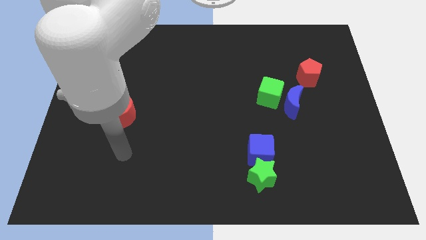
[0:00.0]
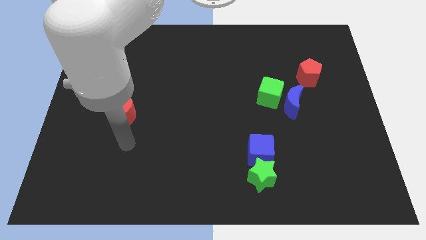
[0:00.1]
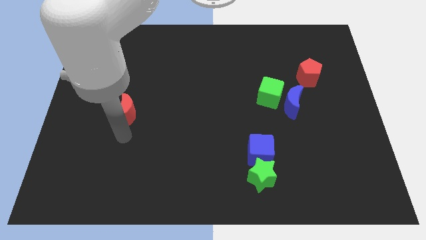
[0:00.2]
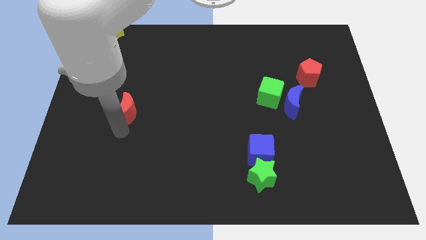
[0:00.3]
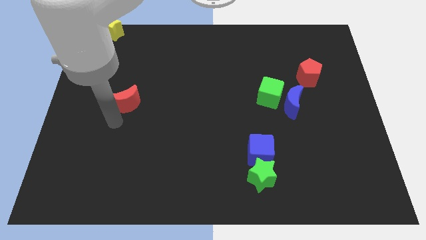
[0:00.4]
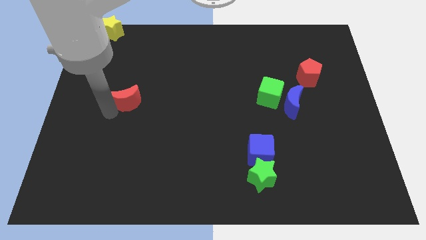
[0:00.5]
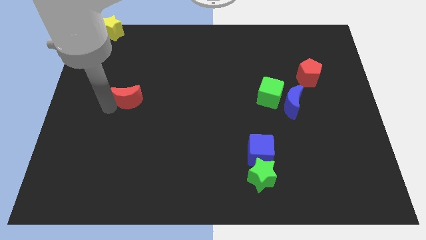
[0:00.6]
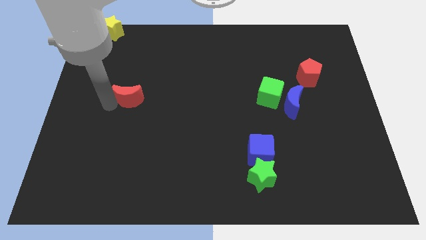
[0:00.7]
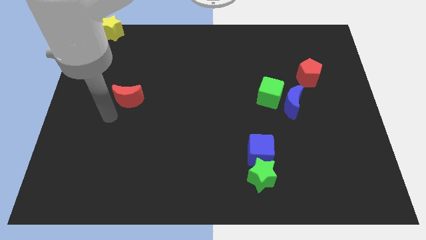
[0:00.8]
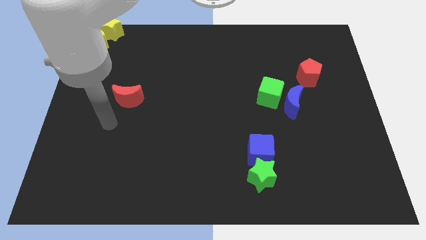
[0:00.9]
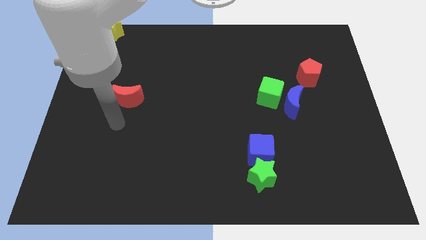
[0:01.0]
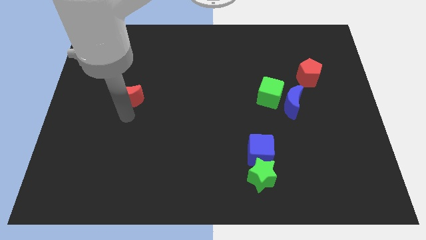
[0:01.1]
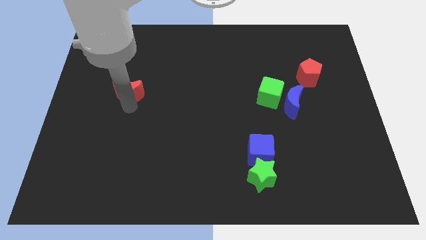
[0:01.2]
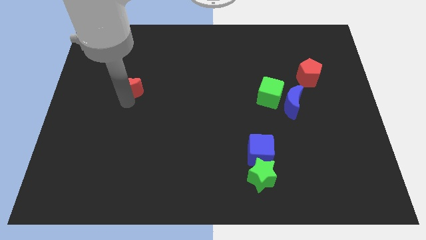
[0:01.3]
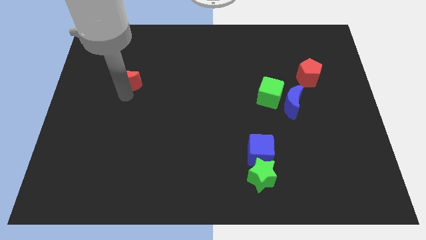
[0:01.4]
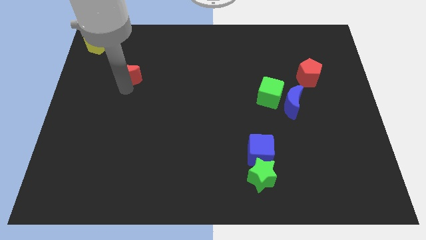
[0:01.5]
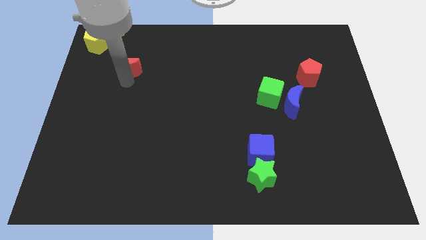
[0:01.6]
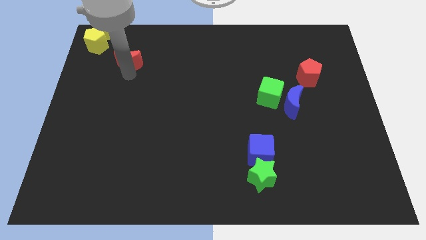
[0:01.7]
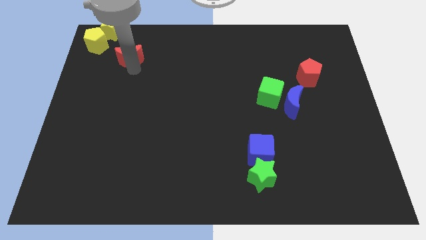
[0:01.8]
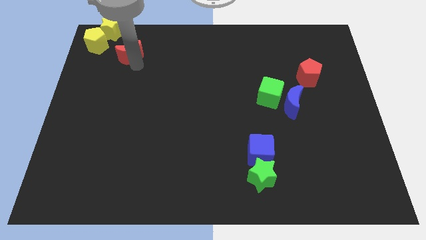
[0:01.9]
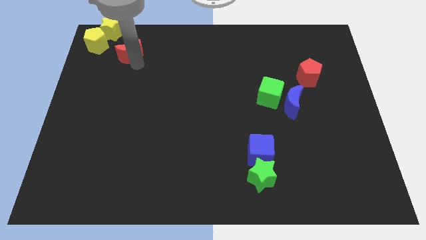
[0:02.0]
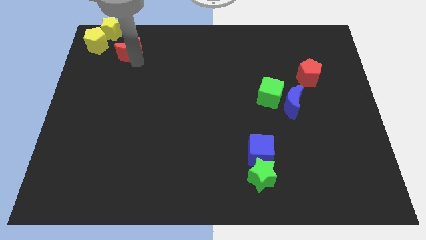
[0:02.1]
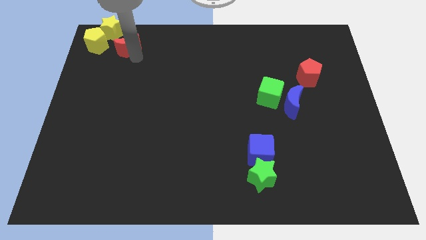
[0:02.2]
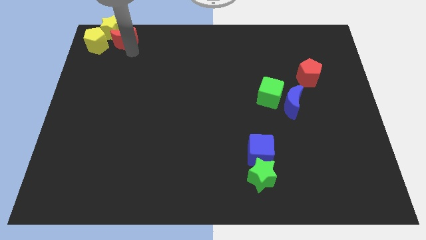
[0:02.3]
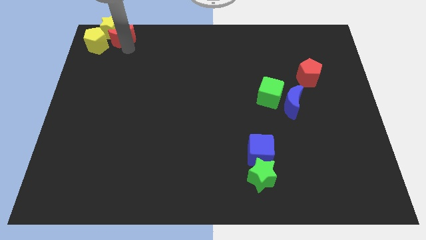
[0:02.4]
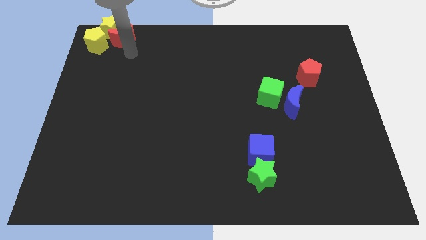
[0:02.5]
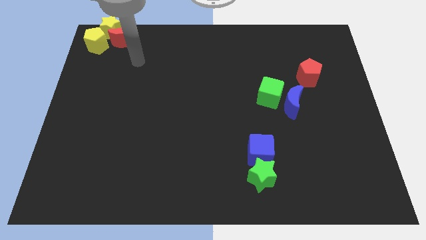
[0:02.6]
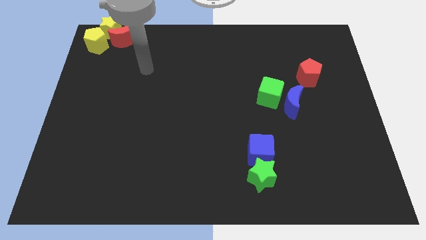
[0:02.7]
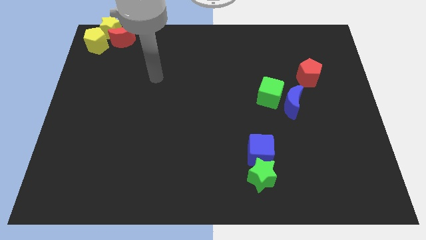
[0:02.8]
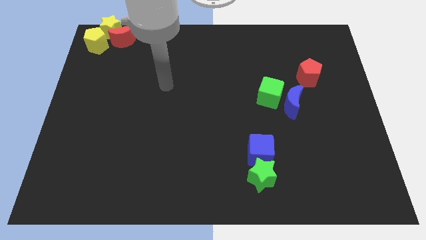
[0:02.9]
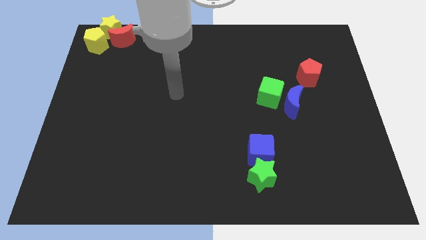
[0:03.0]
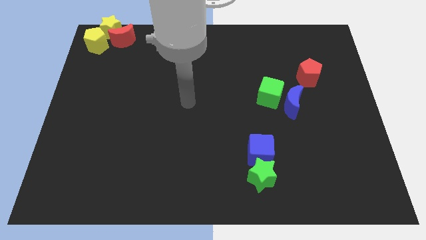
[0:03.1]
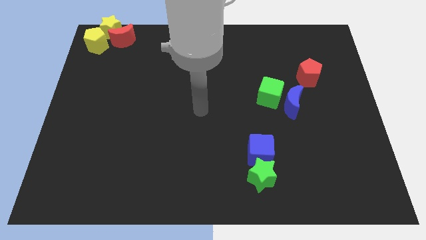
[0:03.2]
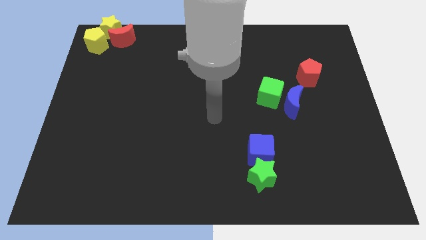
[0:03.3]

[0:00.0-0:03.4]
add the red crescent to the both of yellow blocks

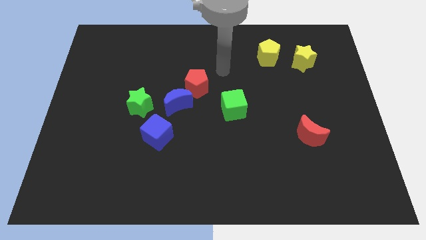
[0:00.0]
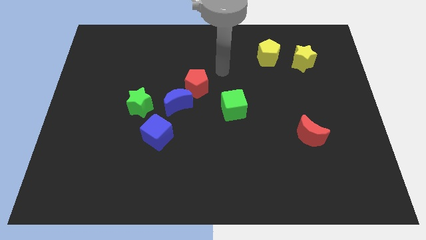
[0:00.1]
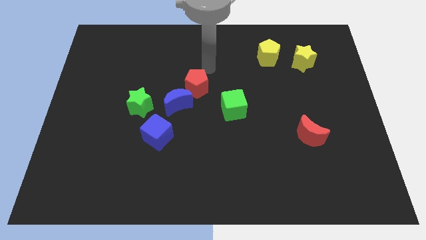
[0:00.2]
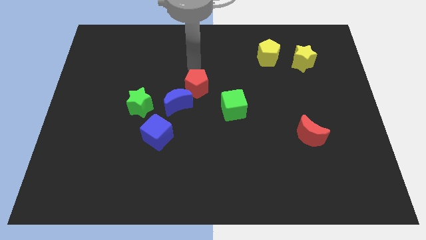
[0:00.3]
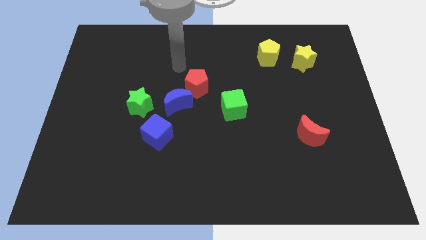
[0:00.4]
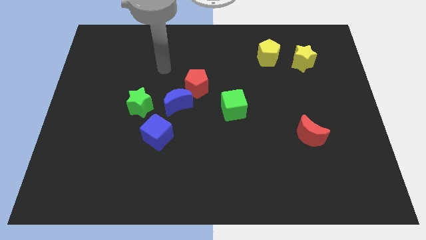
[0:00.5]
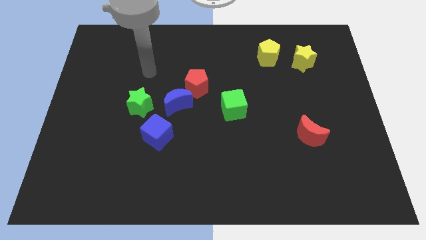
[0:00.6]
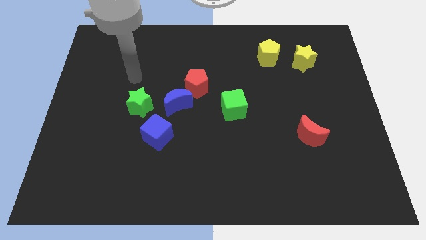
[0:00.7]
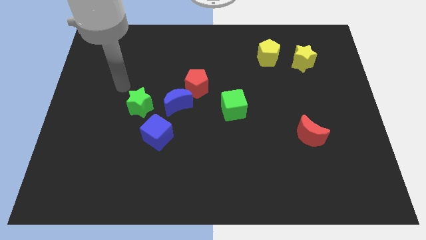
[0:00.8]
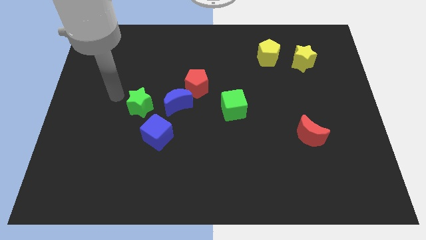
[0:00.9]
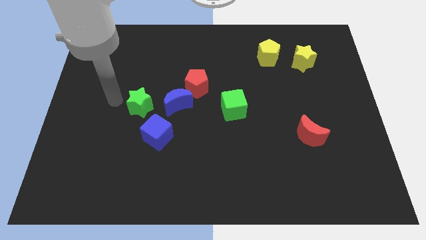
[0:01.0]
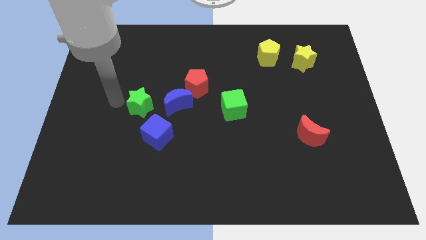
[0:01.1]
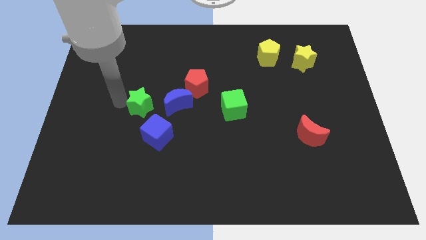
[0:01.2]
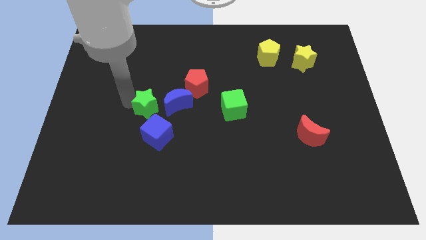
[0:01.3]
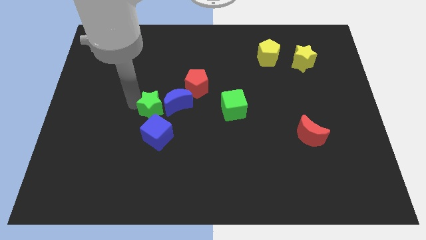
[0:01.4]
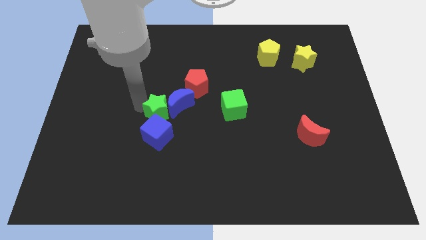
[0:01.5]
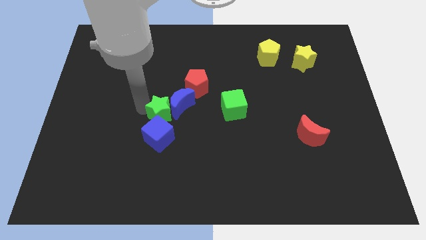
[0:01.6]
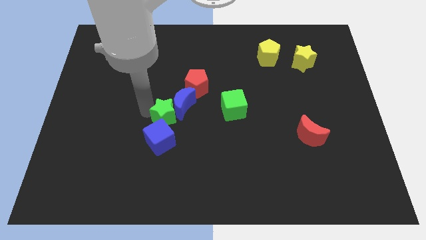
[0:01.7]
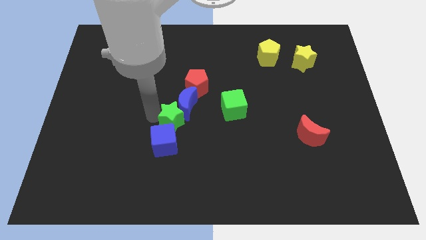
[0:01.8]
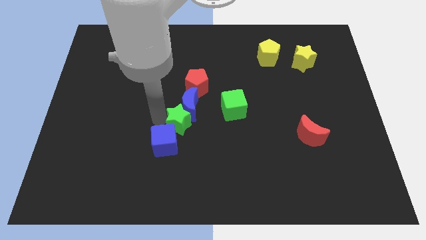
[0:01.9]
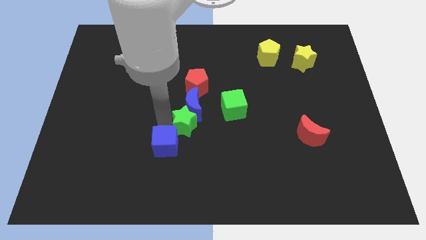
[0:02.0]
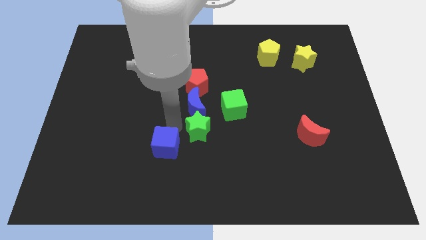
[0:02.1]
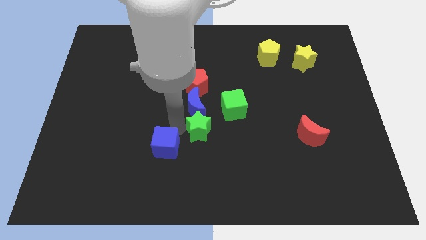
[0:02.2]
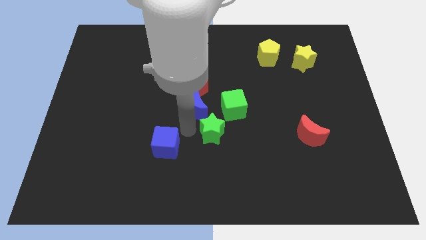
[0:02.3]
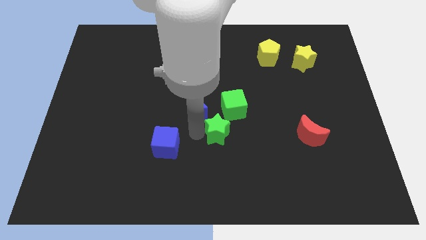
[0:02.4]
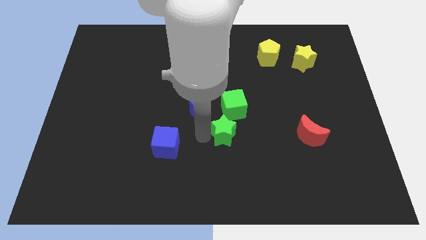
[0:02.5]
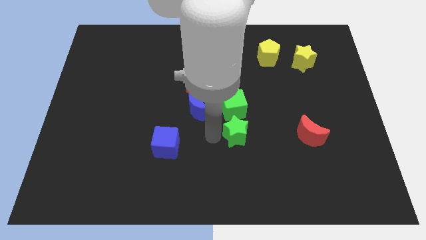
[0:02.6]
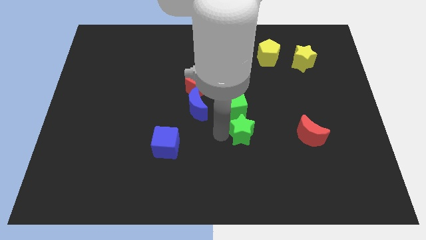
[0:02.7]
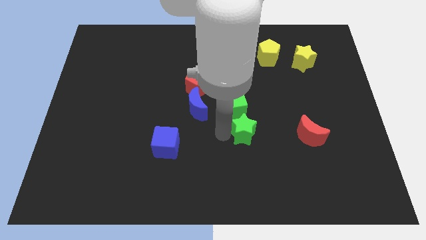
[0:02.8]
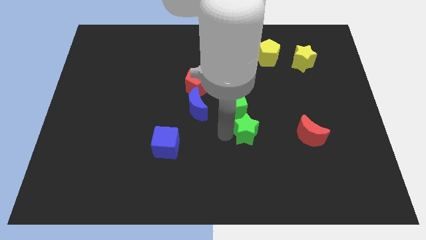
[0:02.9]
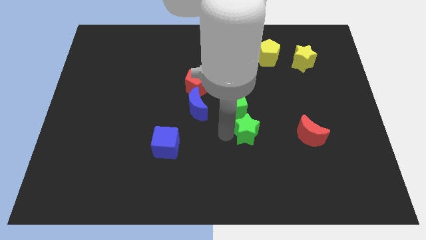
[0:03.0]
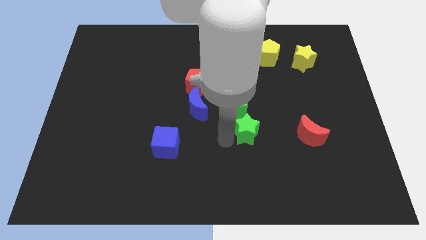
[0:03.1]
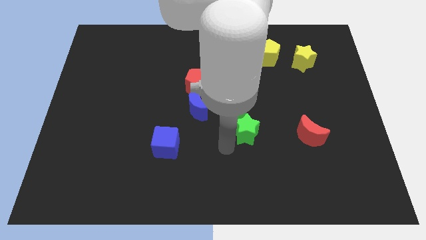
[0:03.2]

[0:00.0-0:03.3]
separate blue blocks with green star

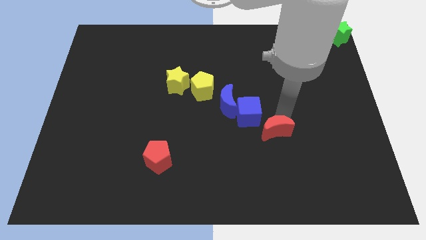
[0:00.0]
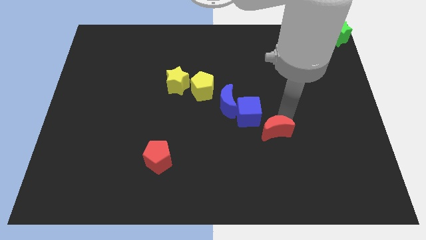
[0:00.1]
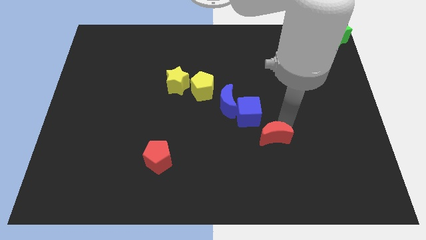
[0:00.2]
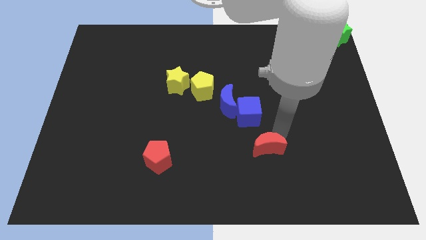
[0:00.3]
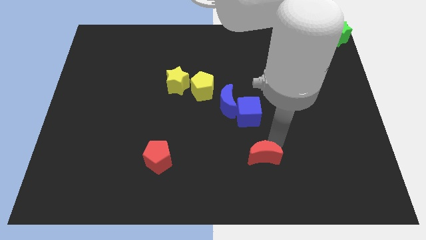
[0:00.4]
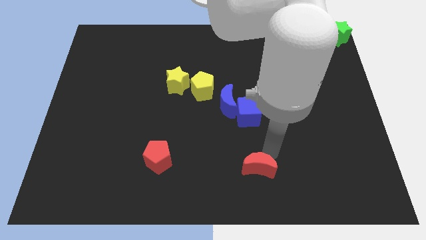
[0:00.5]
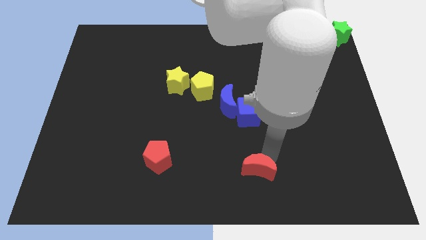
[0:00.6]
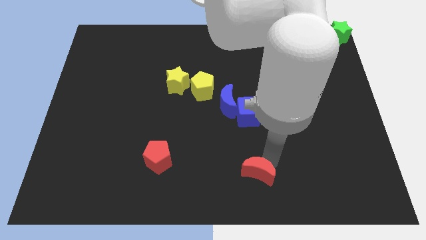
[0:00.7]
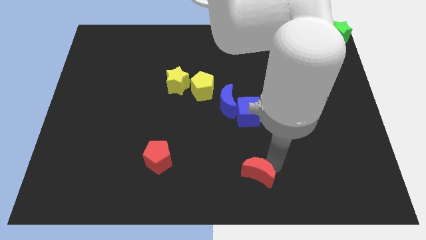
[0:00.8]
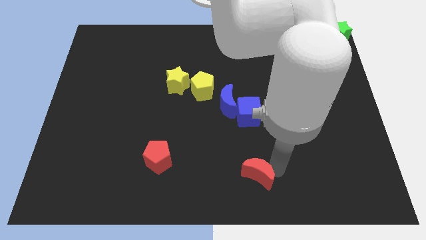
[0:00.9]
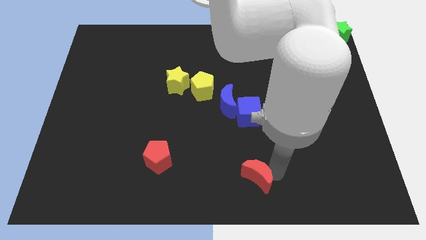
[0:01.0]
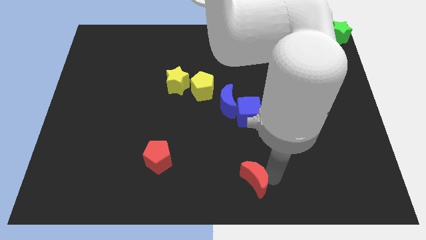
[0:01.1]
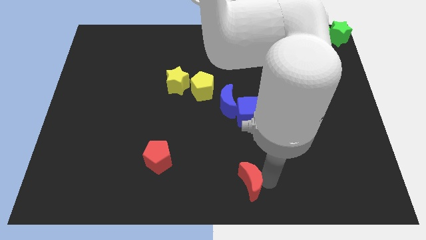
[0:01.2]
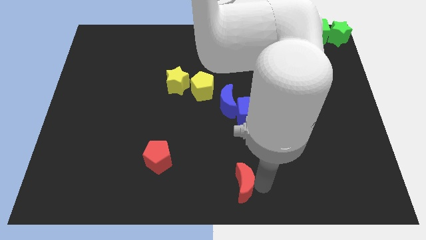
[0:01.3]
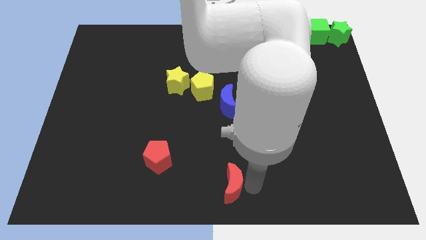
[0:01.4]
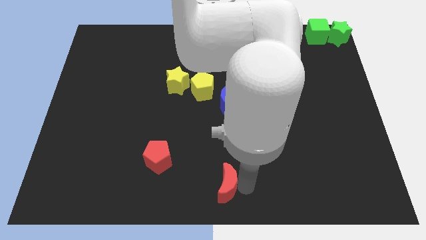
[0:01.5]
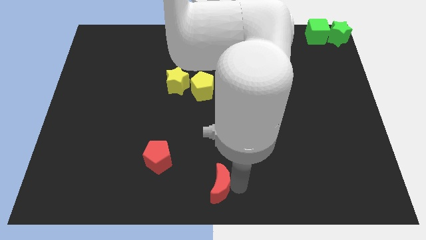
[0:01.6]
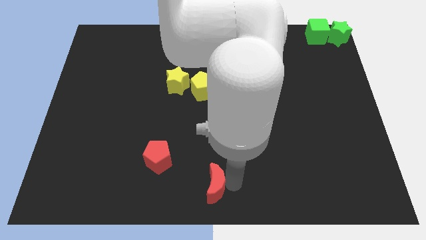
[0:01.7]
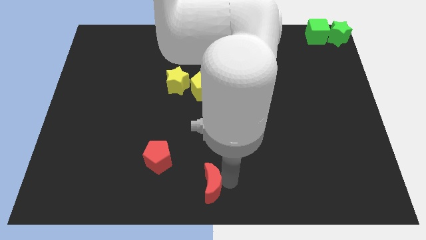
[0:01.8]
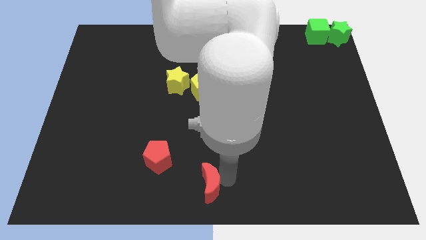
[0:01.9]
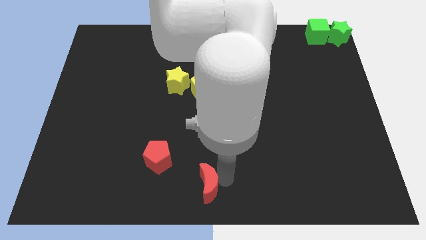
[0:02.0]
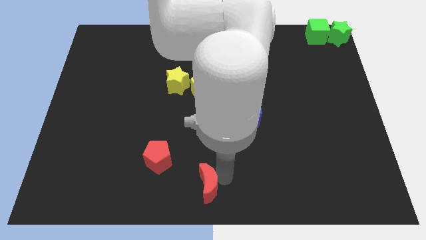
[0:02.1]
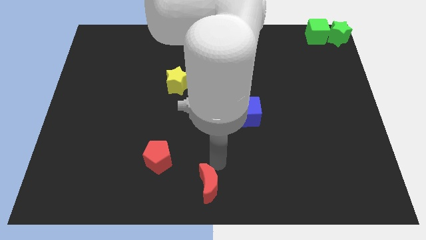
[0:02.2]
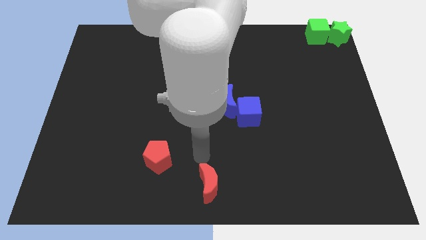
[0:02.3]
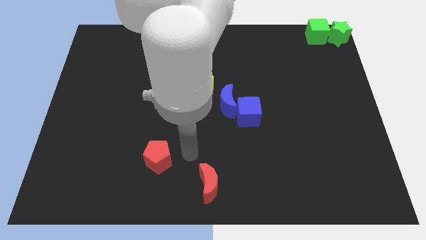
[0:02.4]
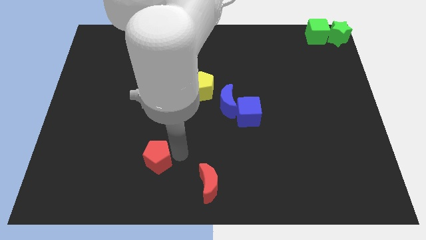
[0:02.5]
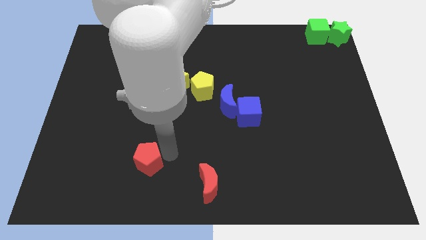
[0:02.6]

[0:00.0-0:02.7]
place the red crescent vertically below the yellow pentagon
